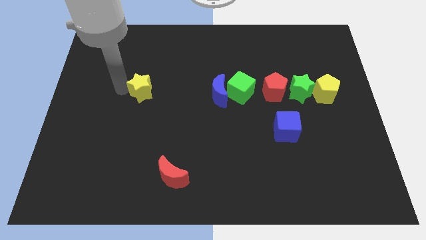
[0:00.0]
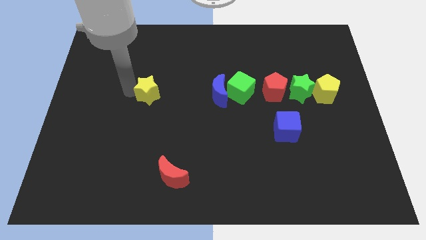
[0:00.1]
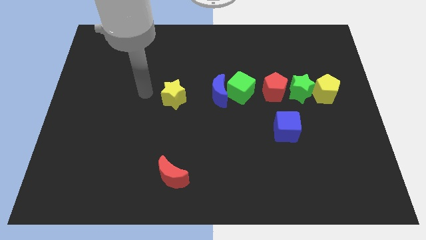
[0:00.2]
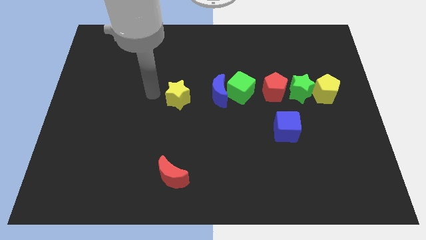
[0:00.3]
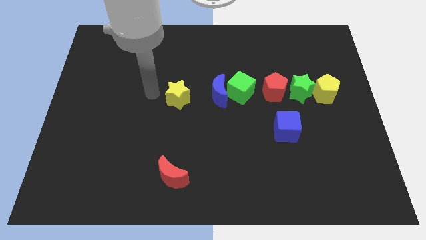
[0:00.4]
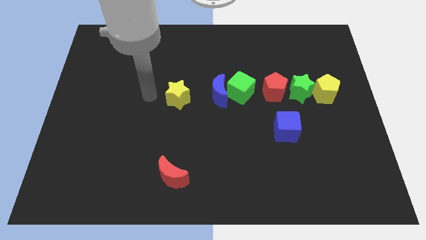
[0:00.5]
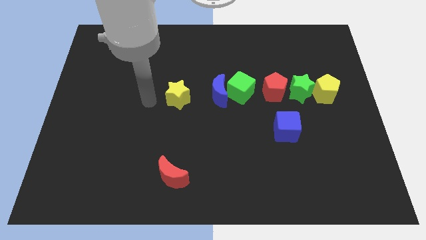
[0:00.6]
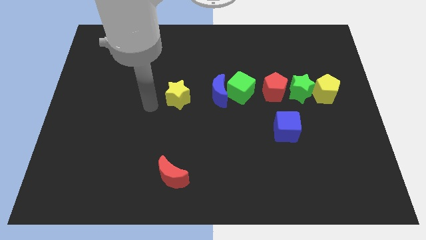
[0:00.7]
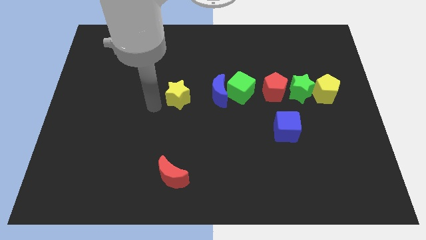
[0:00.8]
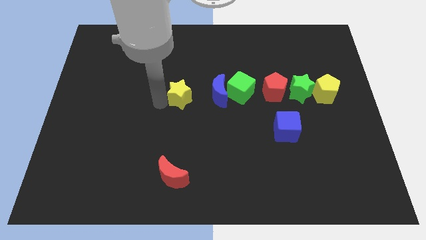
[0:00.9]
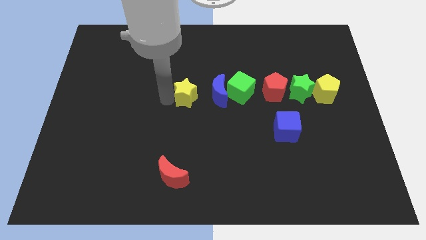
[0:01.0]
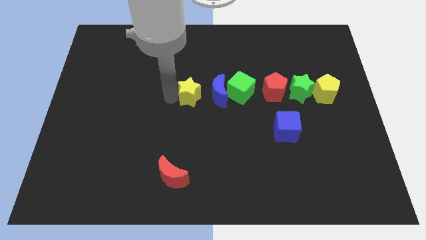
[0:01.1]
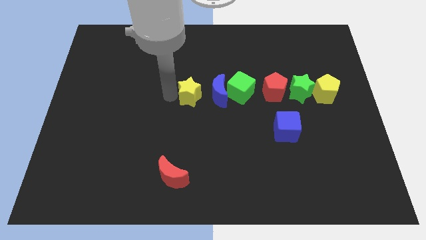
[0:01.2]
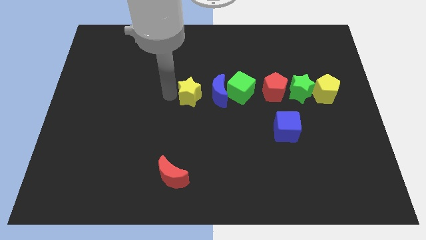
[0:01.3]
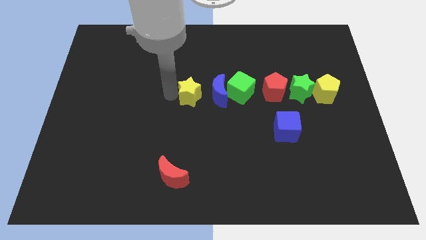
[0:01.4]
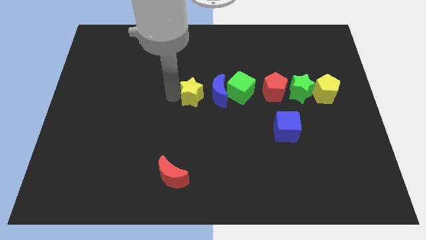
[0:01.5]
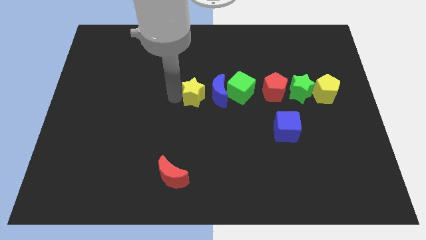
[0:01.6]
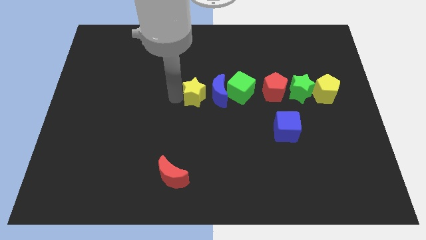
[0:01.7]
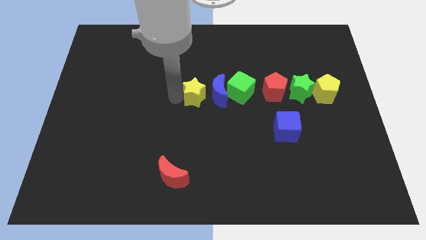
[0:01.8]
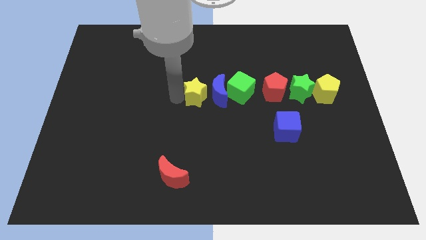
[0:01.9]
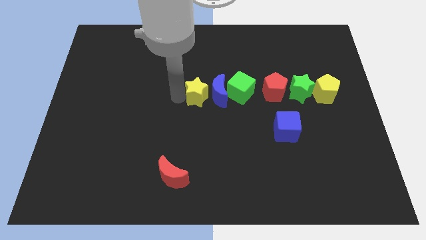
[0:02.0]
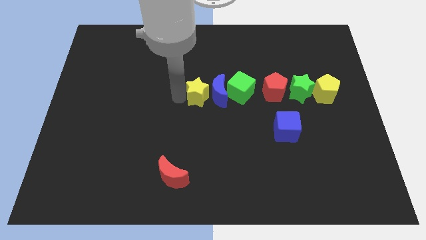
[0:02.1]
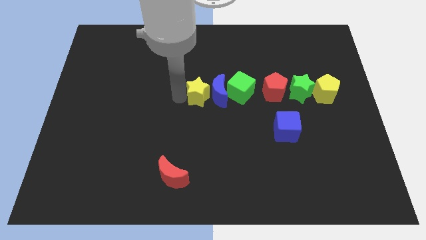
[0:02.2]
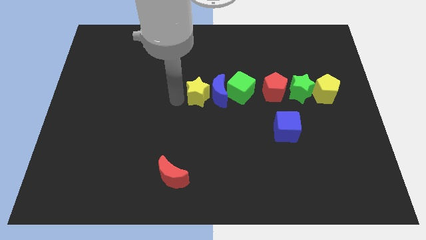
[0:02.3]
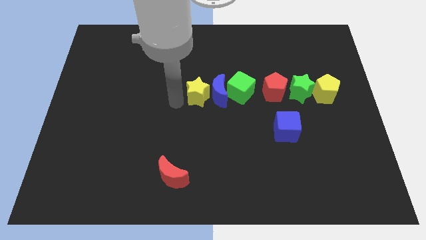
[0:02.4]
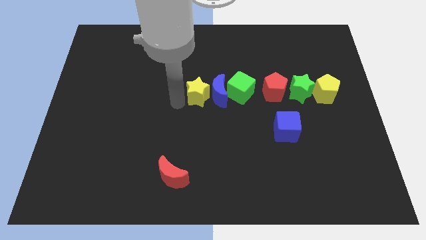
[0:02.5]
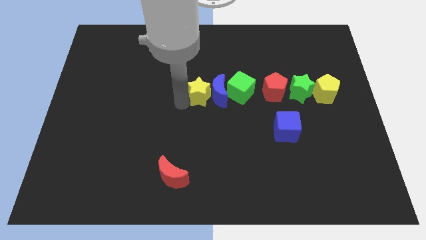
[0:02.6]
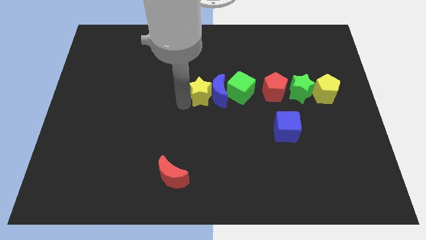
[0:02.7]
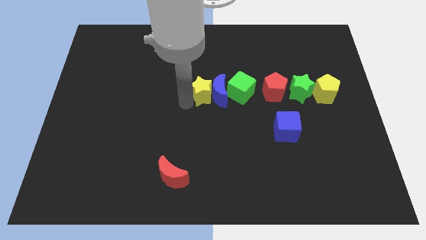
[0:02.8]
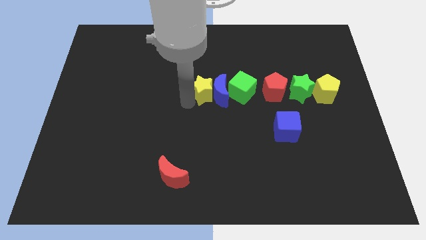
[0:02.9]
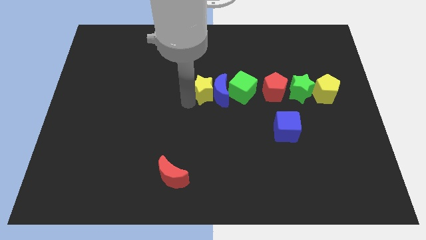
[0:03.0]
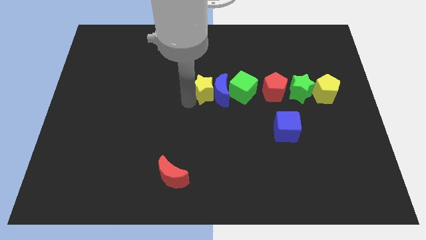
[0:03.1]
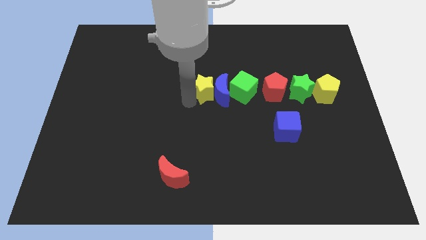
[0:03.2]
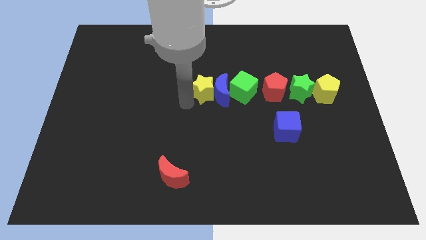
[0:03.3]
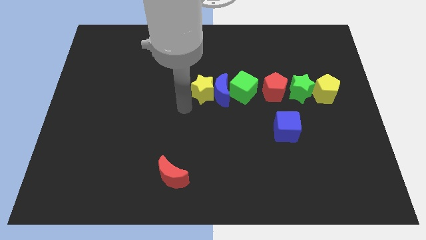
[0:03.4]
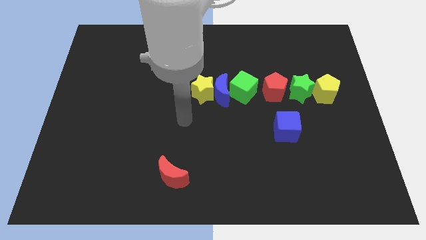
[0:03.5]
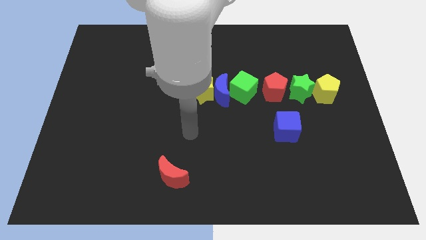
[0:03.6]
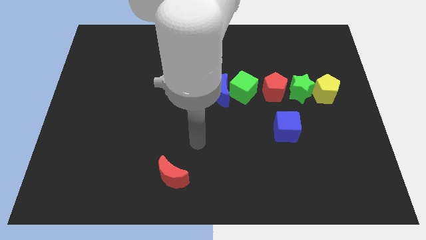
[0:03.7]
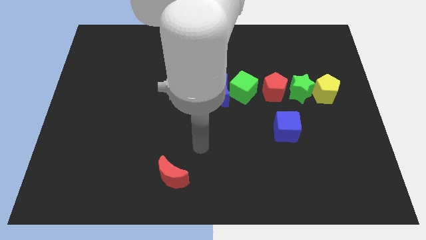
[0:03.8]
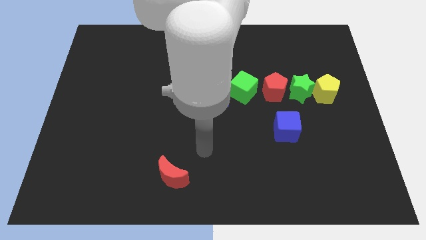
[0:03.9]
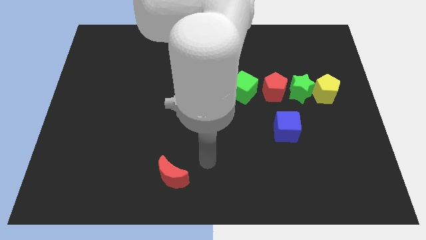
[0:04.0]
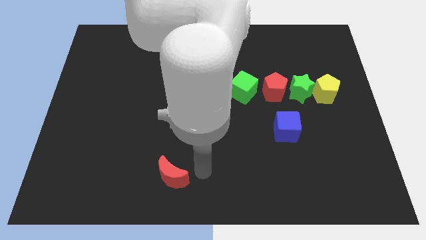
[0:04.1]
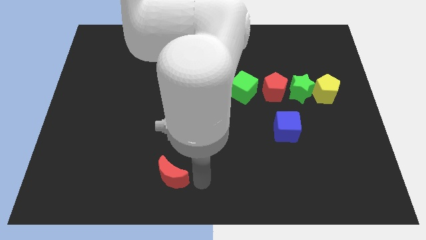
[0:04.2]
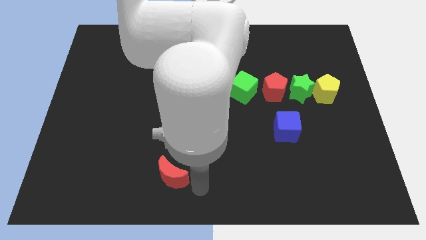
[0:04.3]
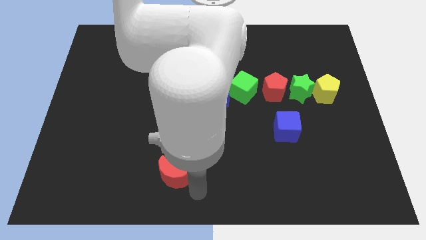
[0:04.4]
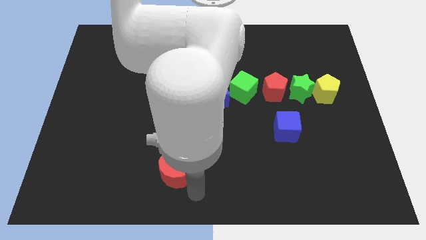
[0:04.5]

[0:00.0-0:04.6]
slide the yellow star into the blue crescent

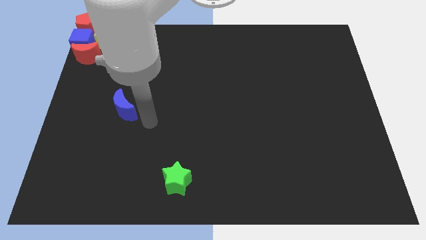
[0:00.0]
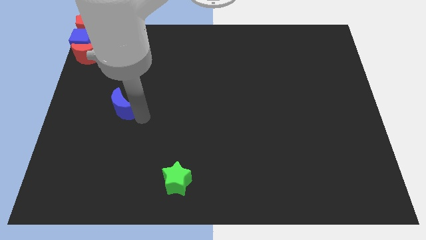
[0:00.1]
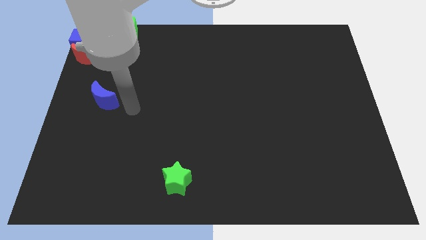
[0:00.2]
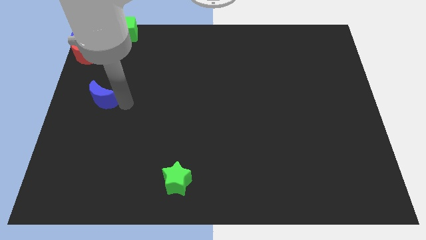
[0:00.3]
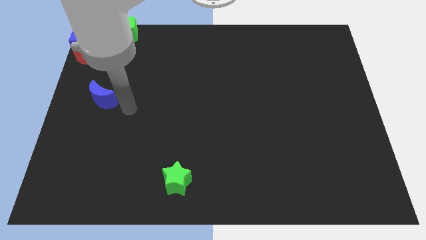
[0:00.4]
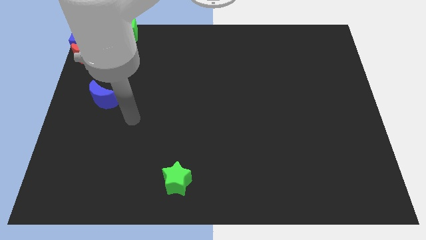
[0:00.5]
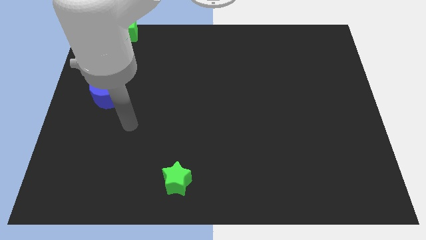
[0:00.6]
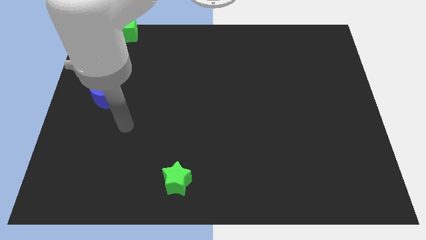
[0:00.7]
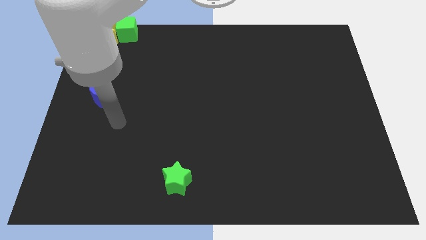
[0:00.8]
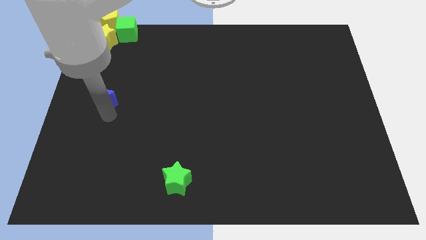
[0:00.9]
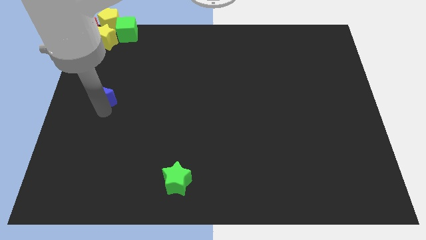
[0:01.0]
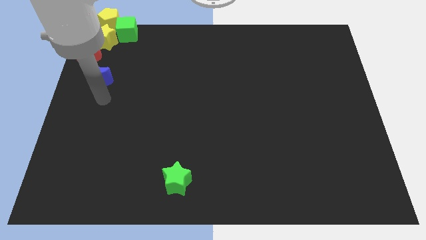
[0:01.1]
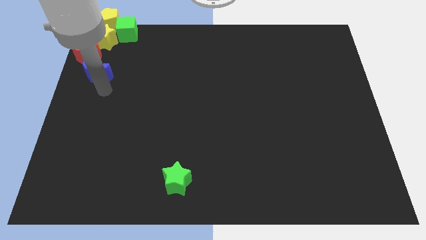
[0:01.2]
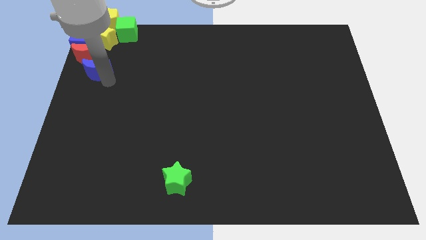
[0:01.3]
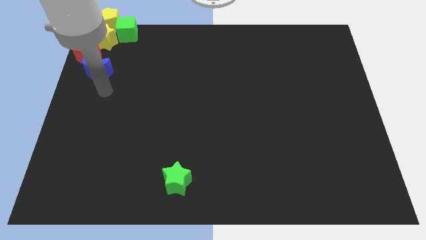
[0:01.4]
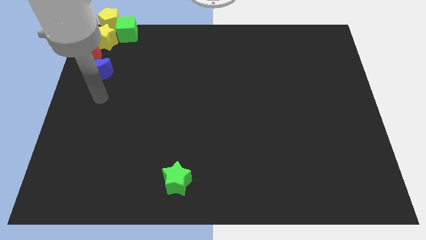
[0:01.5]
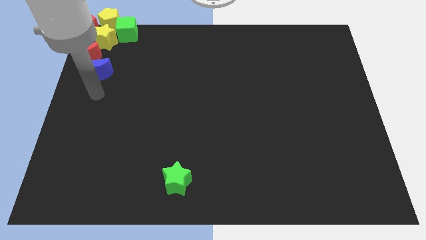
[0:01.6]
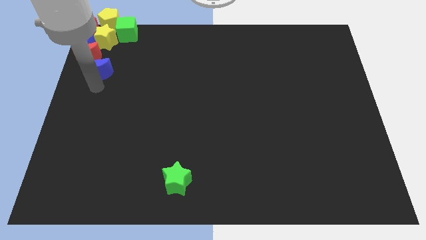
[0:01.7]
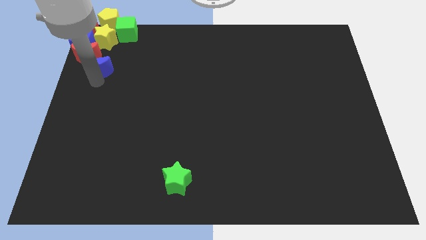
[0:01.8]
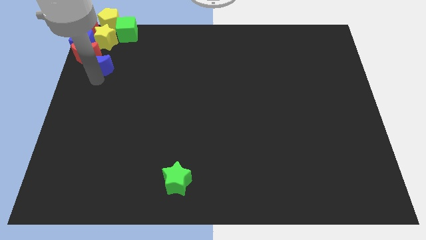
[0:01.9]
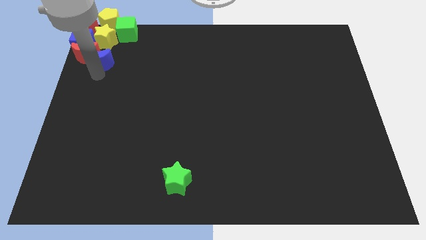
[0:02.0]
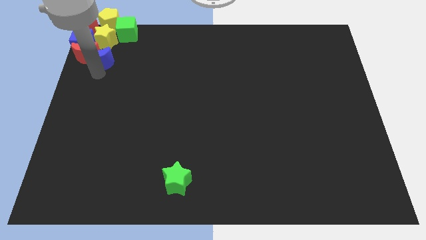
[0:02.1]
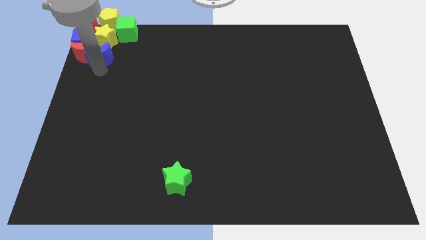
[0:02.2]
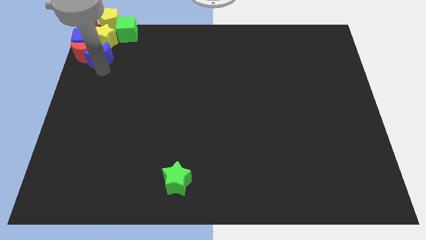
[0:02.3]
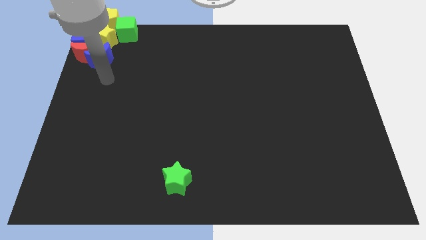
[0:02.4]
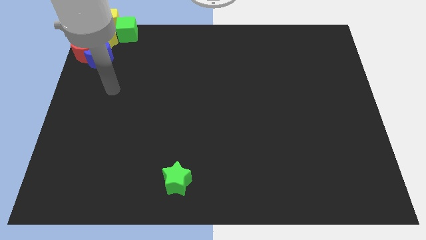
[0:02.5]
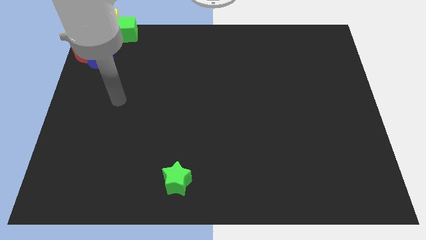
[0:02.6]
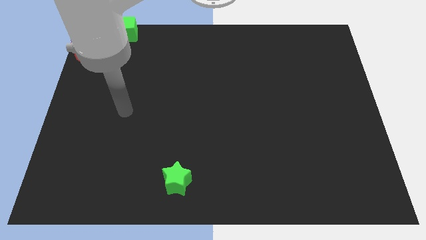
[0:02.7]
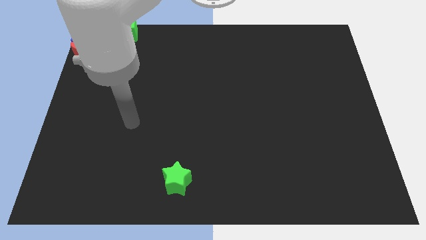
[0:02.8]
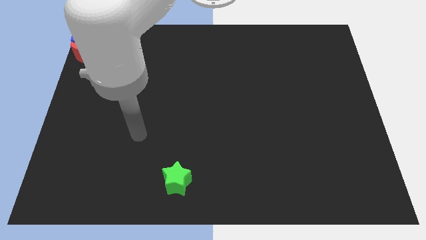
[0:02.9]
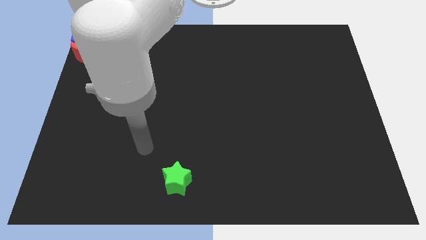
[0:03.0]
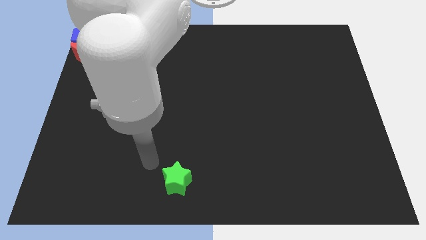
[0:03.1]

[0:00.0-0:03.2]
push the blue moon into the red moon

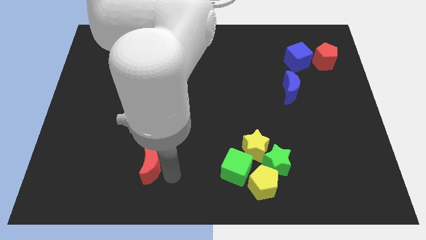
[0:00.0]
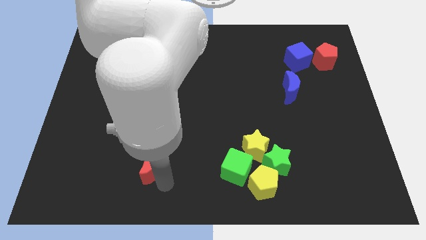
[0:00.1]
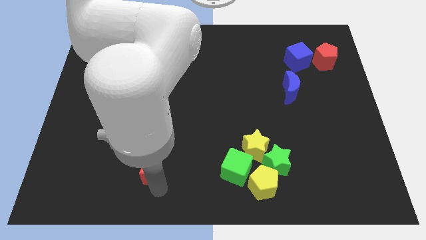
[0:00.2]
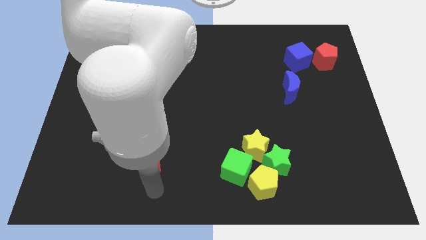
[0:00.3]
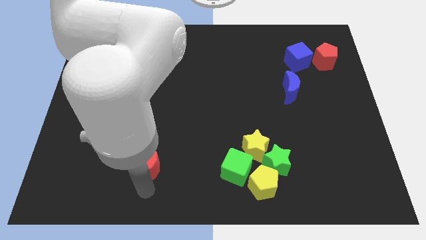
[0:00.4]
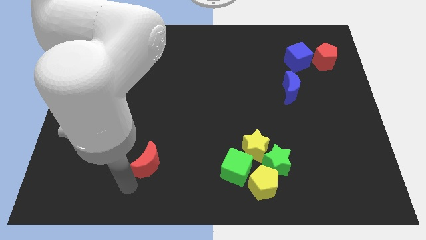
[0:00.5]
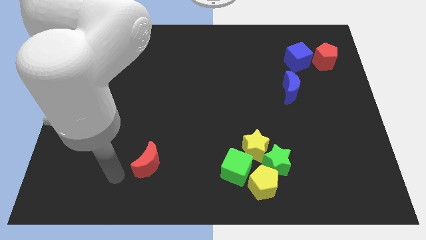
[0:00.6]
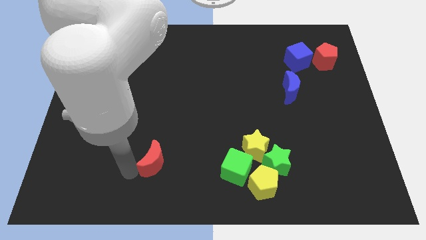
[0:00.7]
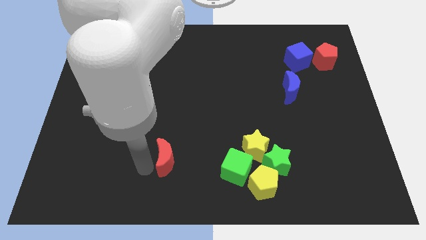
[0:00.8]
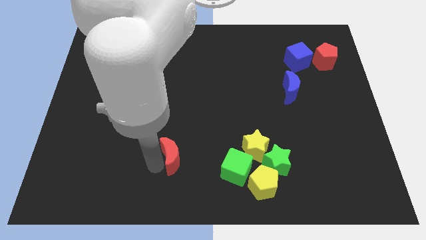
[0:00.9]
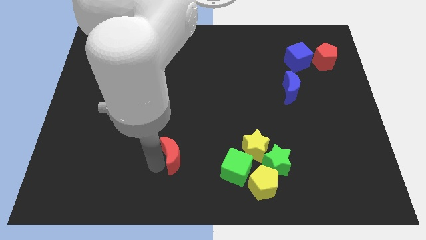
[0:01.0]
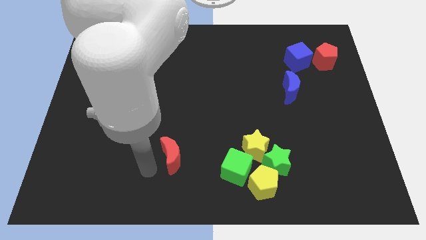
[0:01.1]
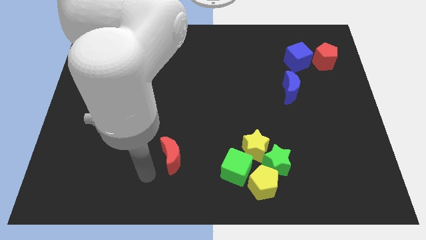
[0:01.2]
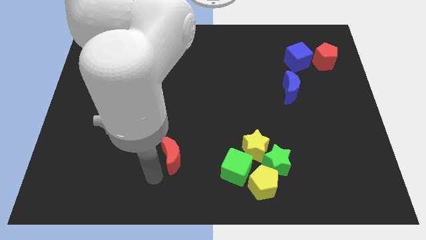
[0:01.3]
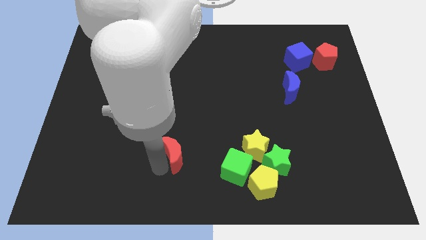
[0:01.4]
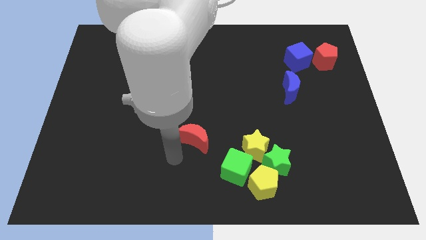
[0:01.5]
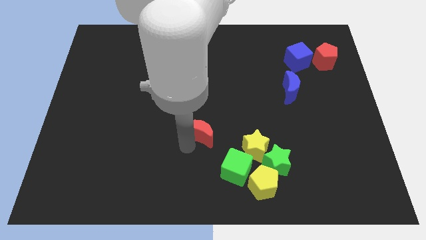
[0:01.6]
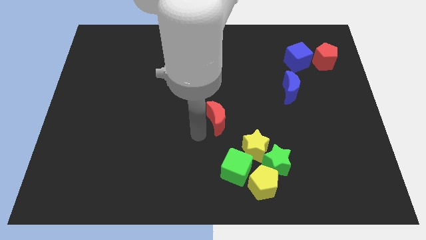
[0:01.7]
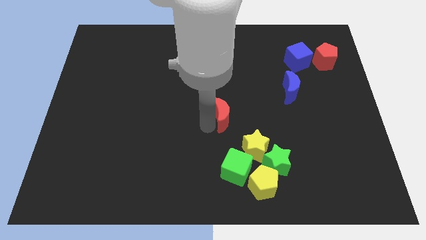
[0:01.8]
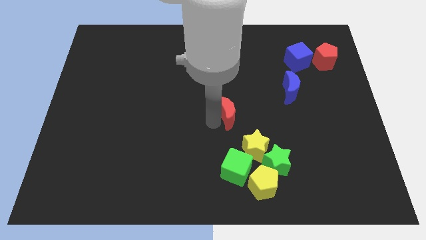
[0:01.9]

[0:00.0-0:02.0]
push the red crescent towards the center of the board
